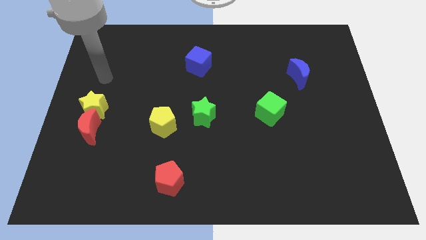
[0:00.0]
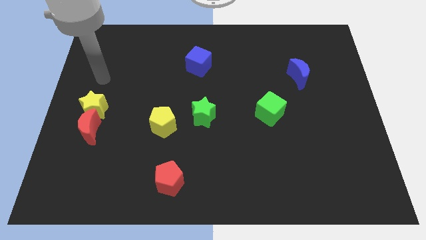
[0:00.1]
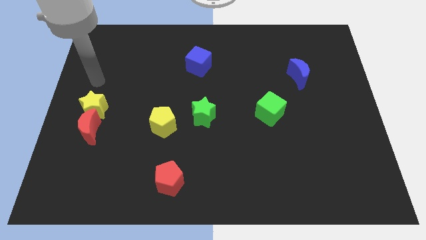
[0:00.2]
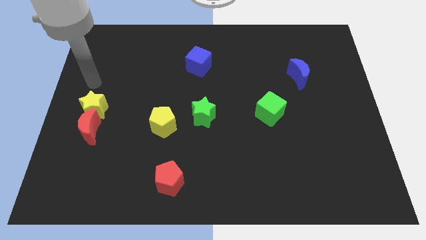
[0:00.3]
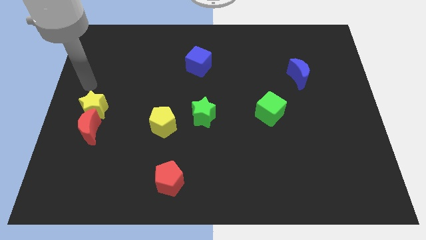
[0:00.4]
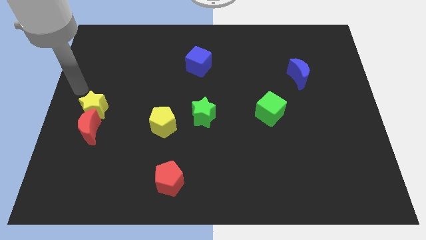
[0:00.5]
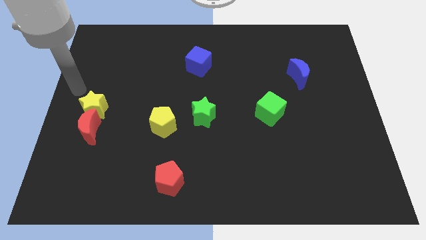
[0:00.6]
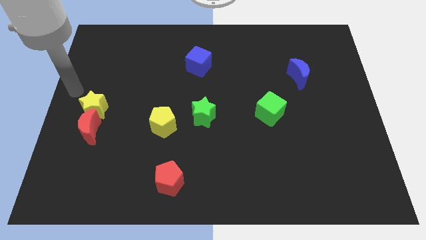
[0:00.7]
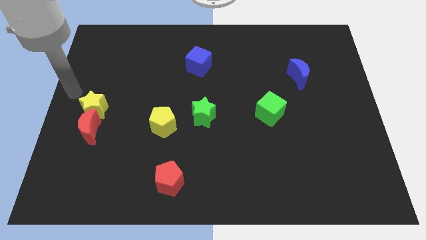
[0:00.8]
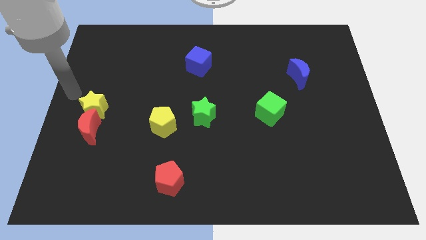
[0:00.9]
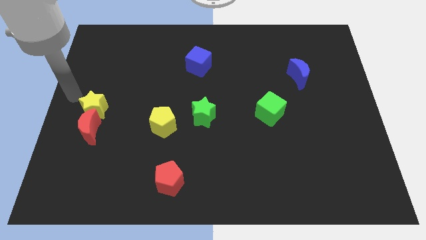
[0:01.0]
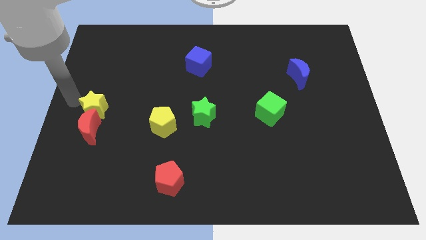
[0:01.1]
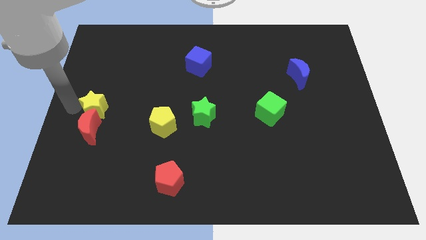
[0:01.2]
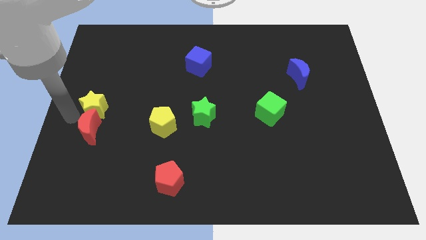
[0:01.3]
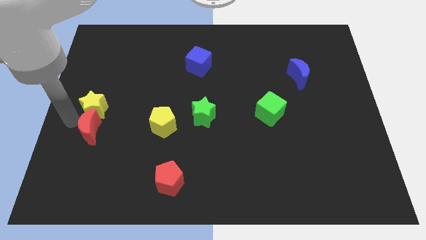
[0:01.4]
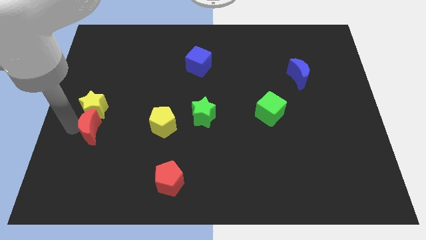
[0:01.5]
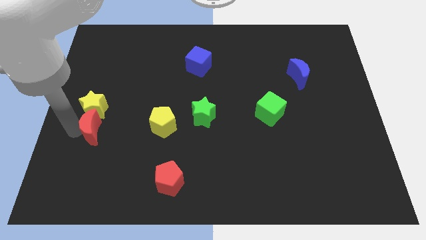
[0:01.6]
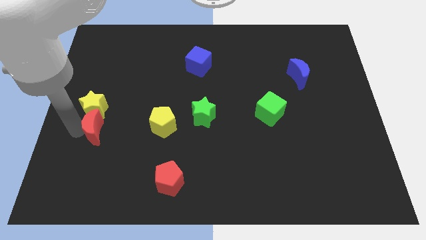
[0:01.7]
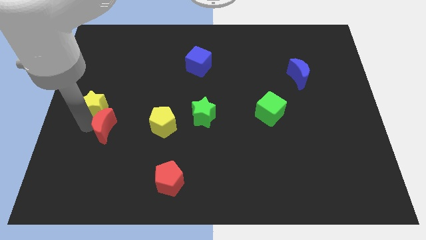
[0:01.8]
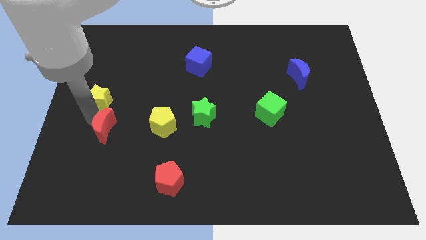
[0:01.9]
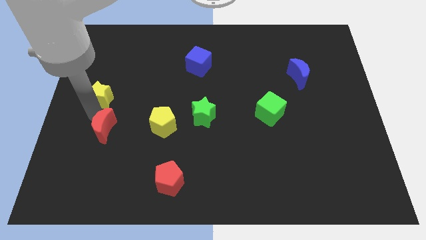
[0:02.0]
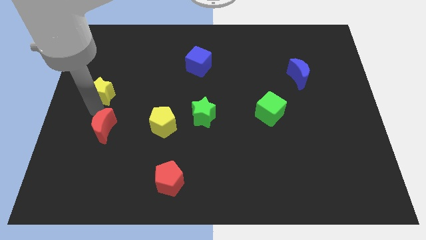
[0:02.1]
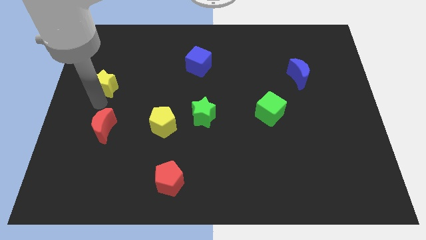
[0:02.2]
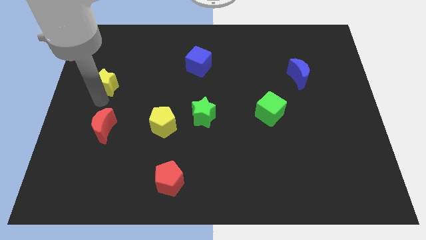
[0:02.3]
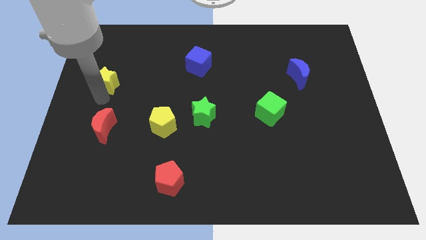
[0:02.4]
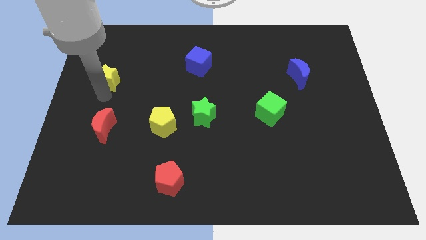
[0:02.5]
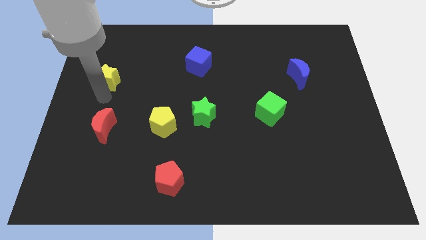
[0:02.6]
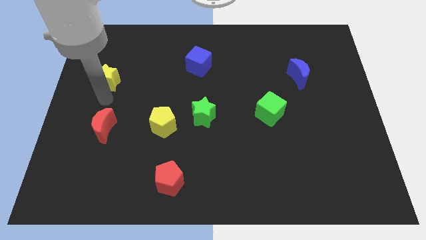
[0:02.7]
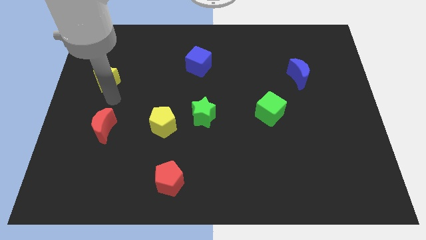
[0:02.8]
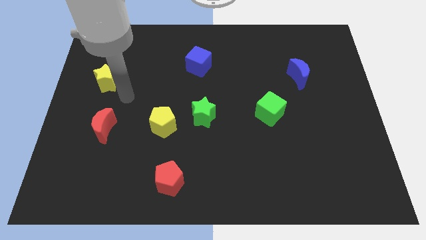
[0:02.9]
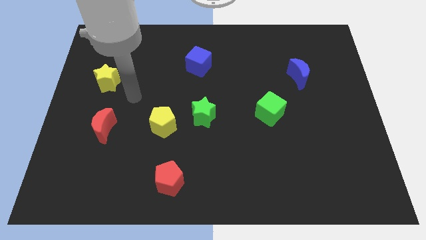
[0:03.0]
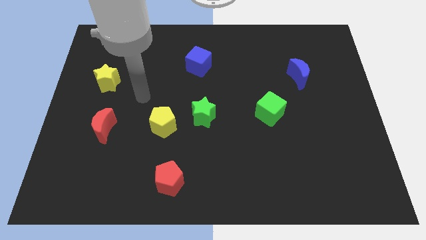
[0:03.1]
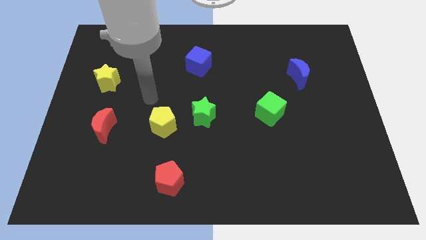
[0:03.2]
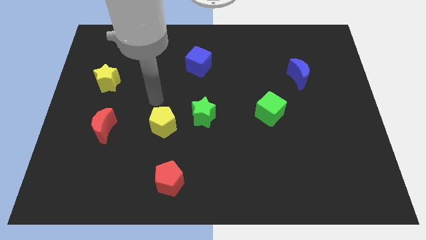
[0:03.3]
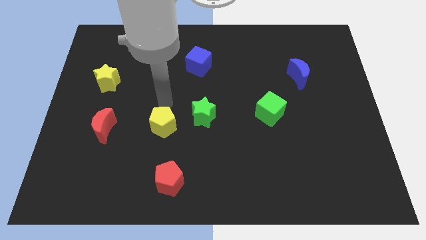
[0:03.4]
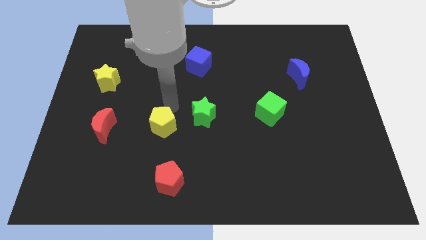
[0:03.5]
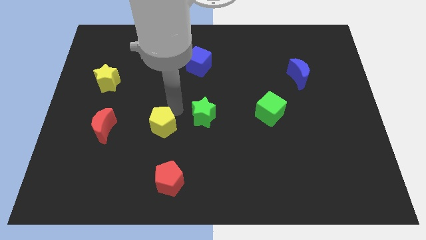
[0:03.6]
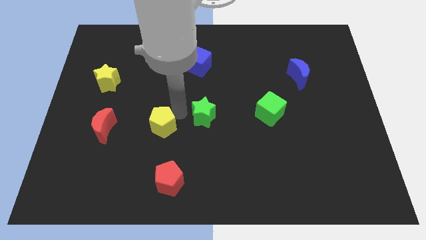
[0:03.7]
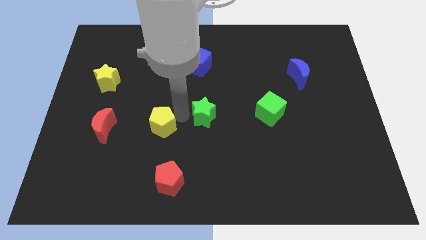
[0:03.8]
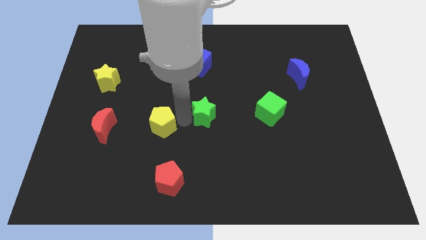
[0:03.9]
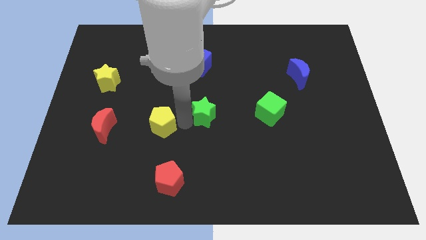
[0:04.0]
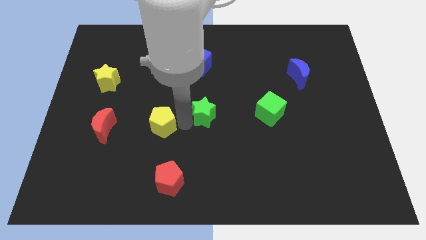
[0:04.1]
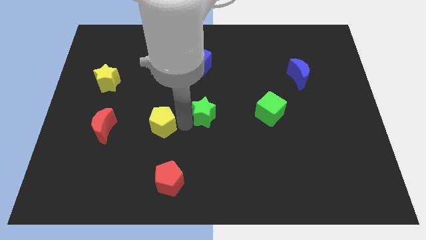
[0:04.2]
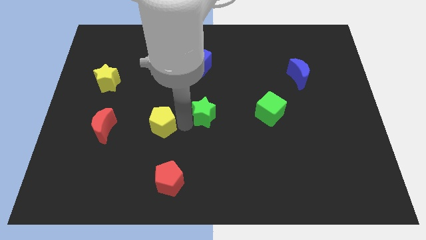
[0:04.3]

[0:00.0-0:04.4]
separate the yellow star from the red moon

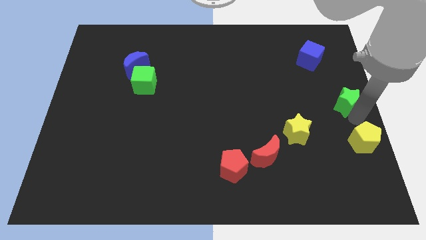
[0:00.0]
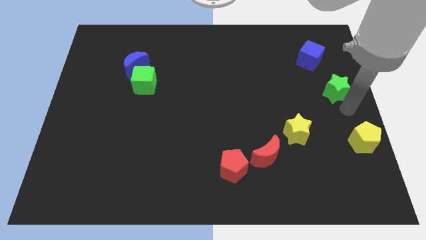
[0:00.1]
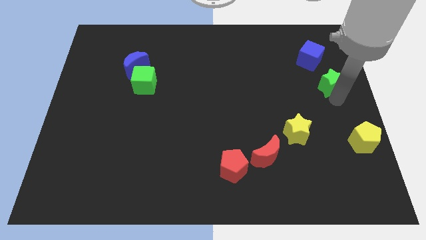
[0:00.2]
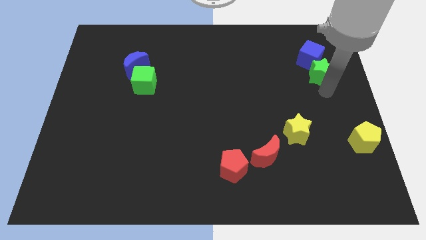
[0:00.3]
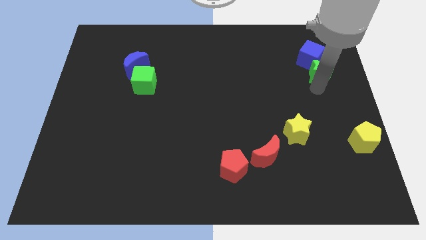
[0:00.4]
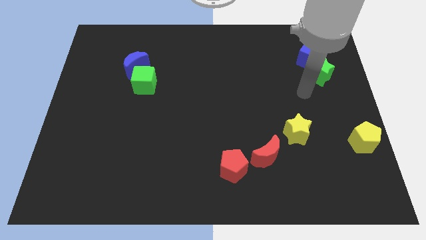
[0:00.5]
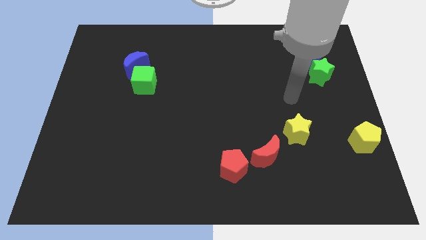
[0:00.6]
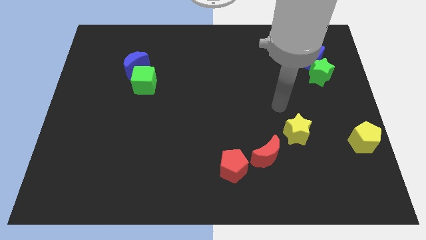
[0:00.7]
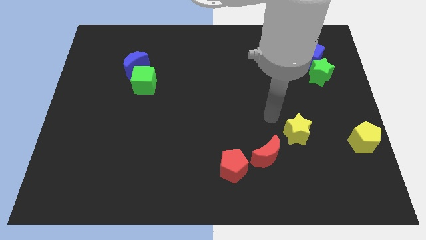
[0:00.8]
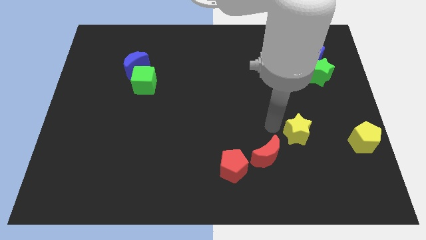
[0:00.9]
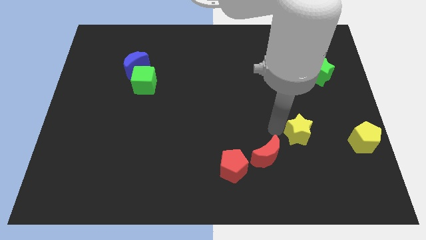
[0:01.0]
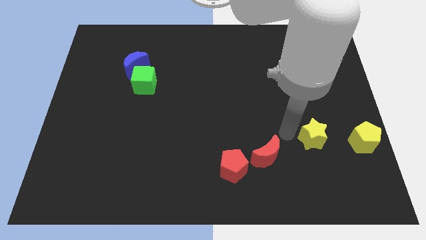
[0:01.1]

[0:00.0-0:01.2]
push green star below blue cube

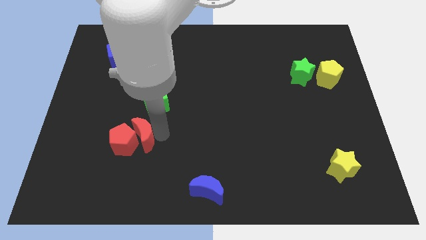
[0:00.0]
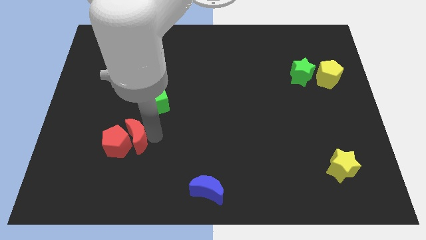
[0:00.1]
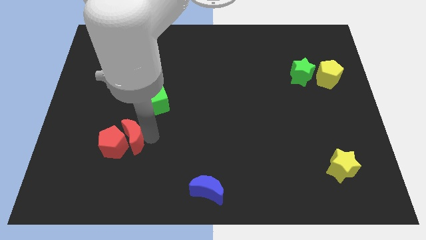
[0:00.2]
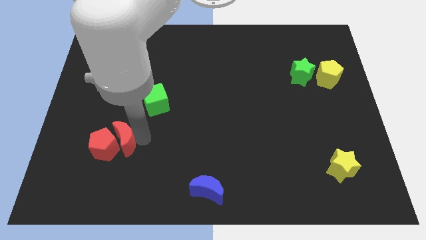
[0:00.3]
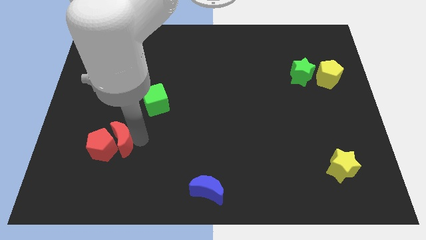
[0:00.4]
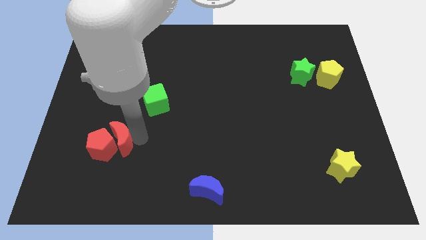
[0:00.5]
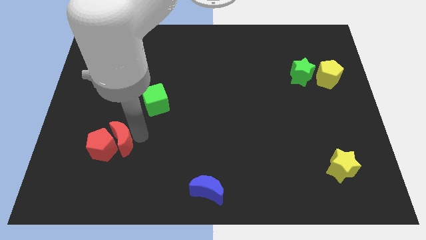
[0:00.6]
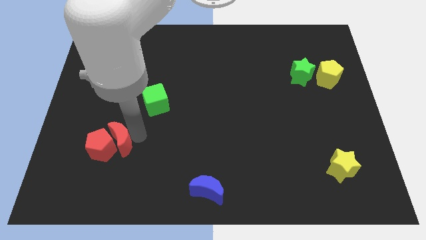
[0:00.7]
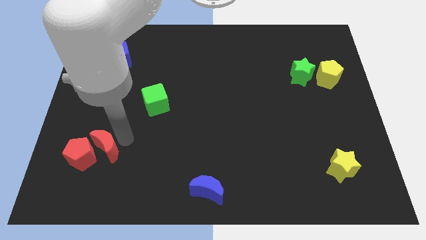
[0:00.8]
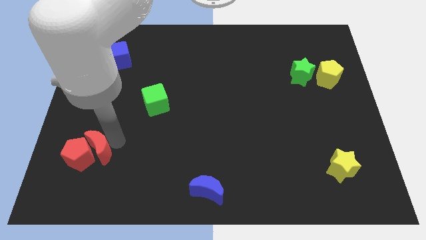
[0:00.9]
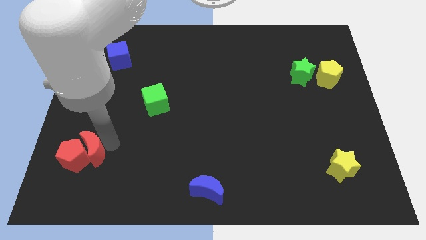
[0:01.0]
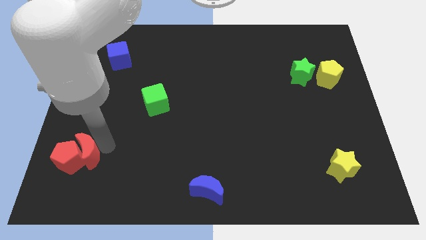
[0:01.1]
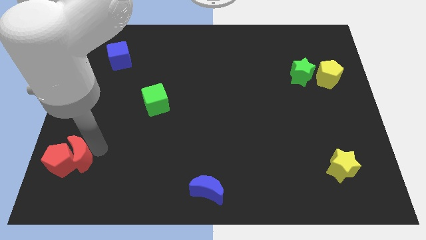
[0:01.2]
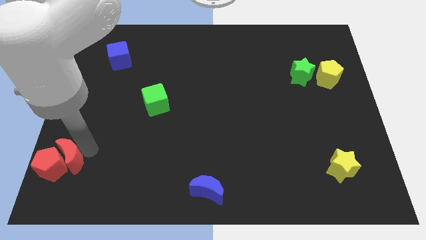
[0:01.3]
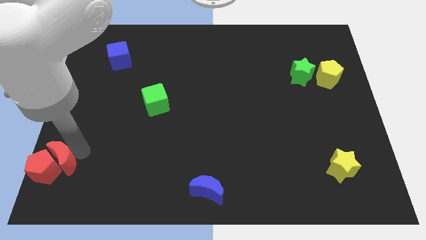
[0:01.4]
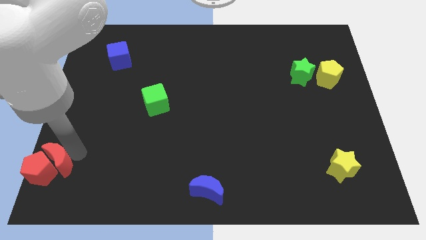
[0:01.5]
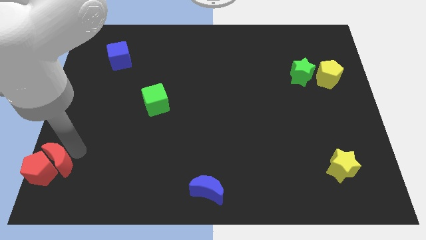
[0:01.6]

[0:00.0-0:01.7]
slide the red blocks to the bottom left side of the table

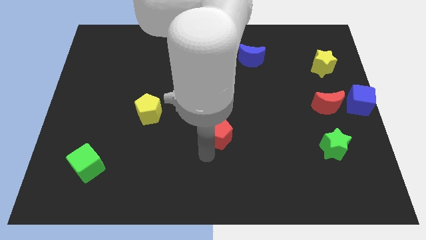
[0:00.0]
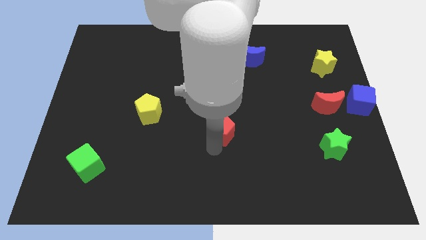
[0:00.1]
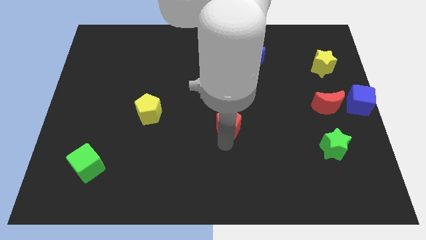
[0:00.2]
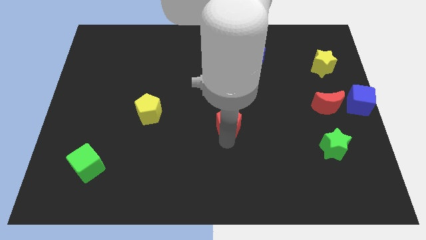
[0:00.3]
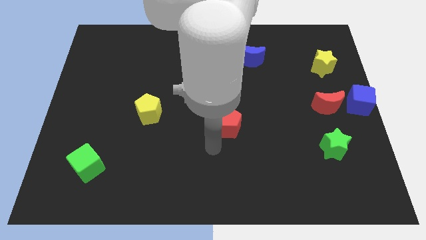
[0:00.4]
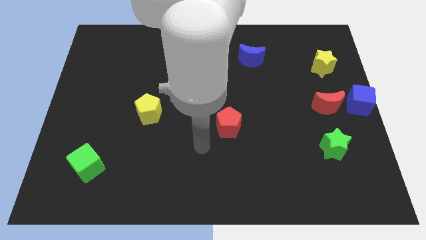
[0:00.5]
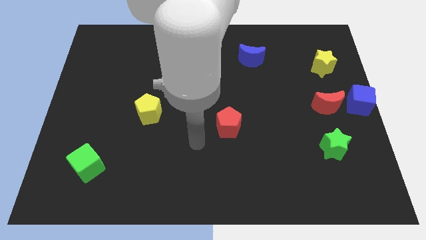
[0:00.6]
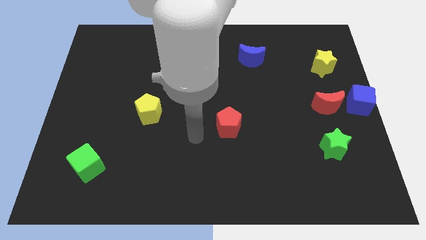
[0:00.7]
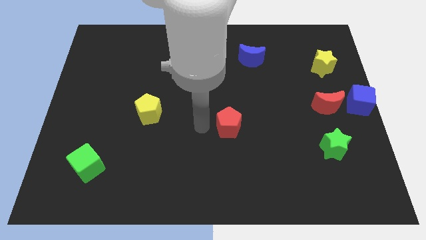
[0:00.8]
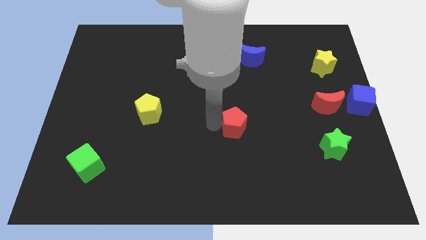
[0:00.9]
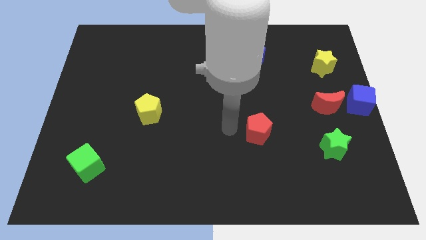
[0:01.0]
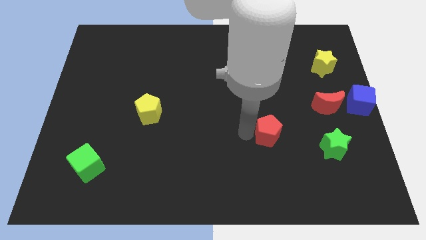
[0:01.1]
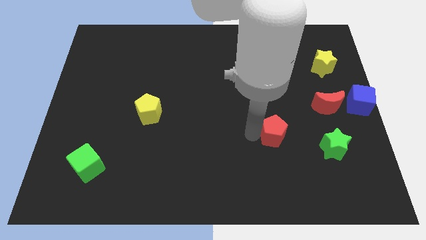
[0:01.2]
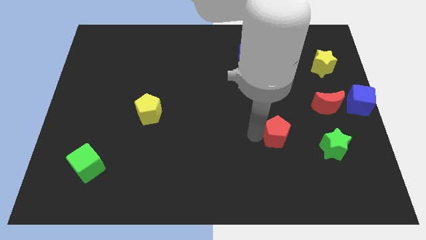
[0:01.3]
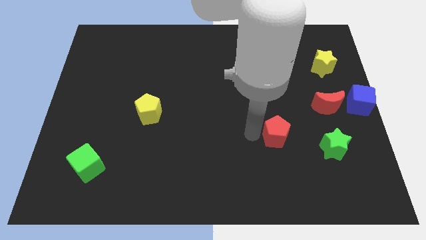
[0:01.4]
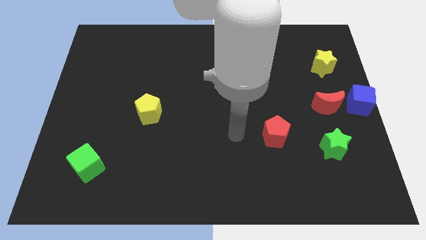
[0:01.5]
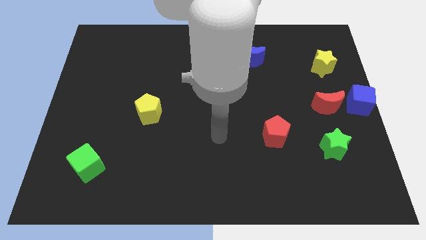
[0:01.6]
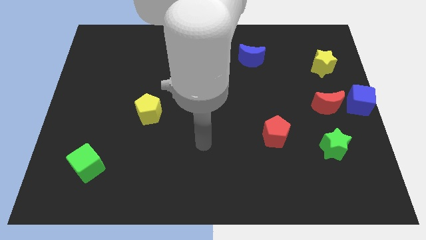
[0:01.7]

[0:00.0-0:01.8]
place the red pentagon to the left of green star
